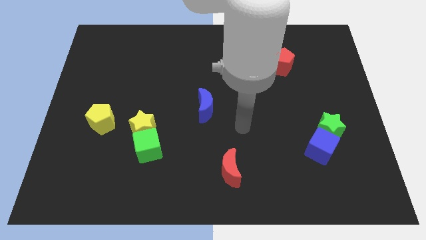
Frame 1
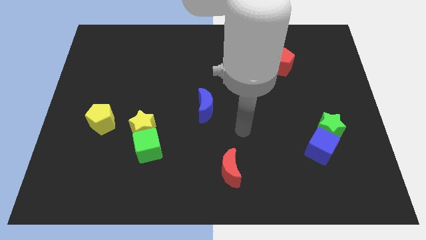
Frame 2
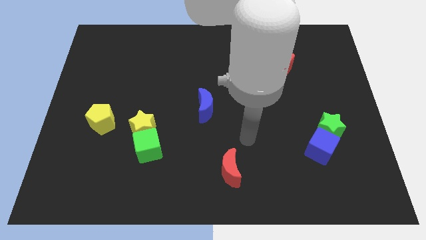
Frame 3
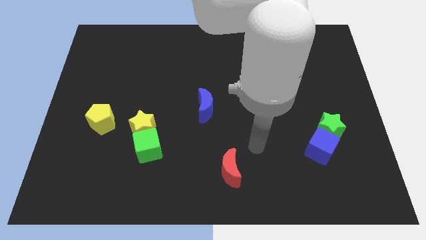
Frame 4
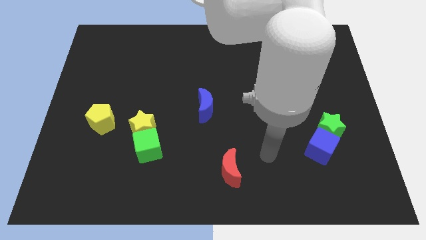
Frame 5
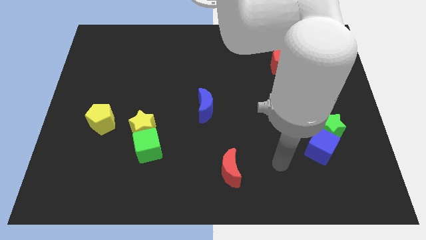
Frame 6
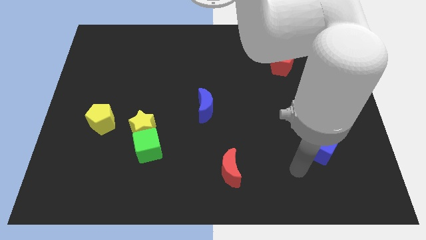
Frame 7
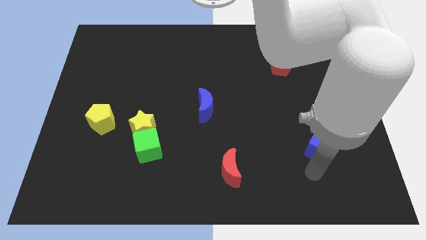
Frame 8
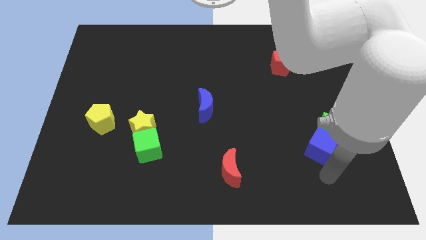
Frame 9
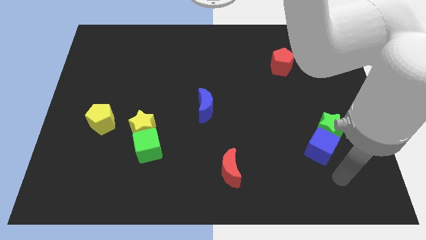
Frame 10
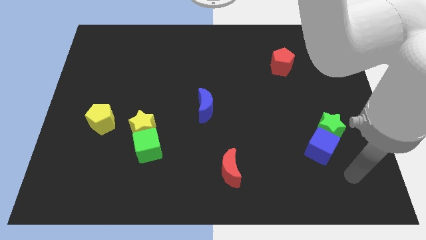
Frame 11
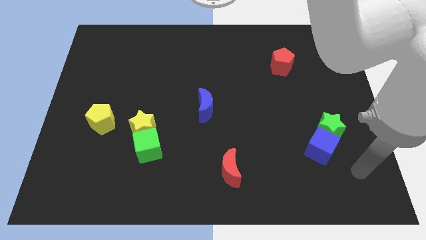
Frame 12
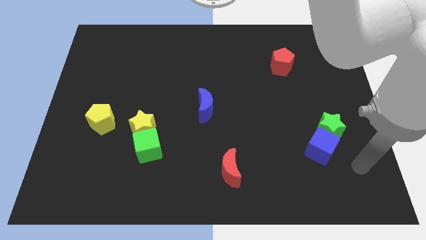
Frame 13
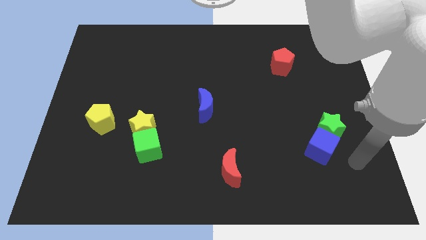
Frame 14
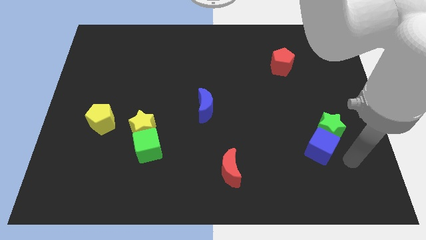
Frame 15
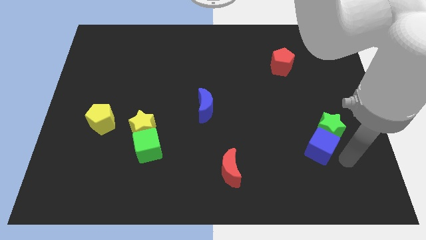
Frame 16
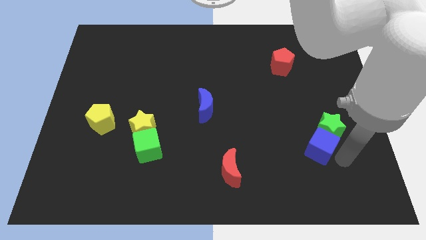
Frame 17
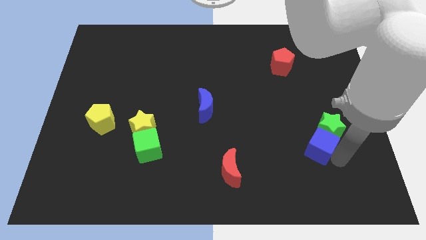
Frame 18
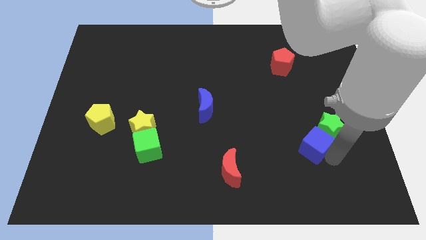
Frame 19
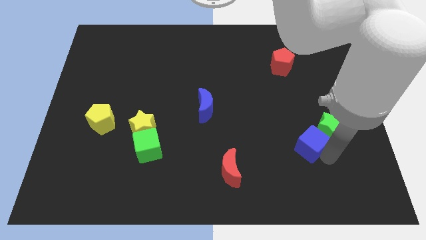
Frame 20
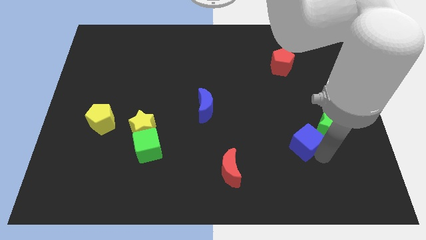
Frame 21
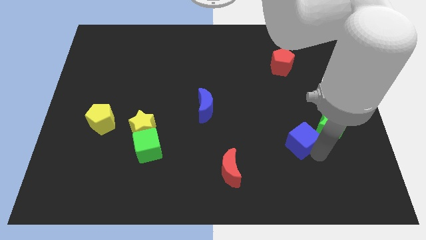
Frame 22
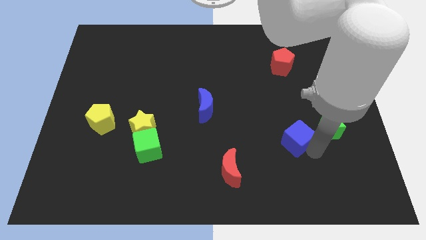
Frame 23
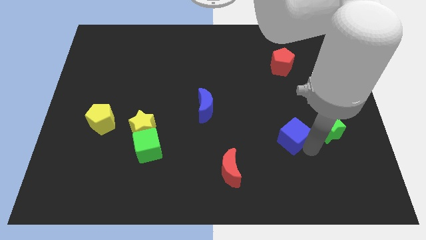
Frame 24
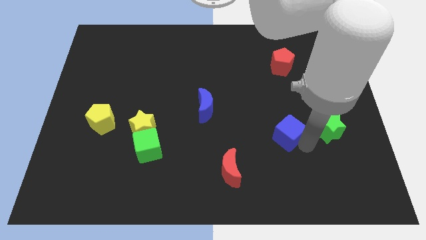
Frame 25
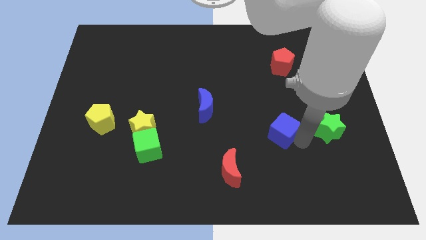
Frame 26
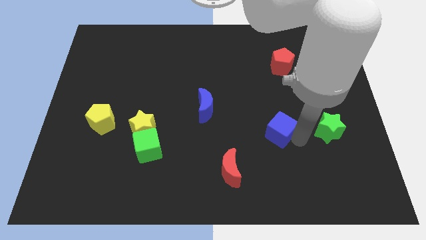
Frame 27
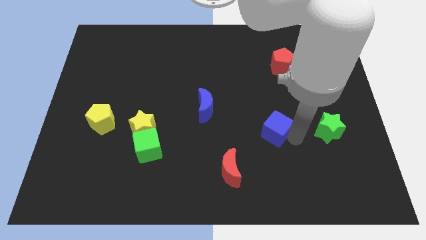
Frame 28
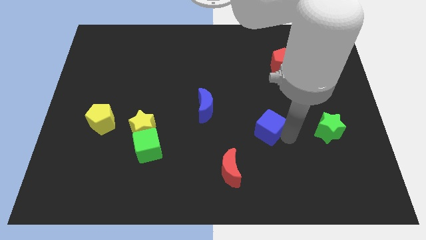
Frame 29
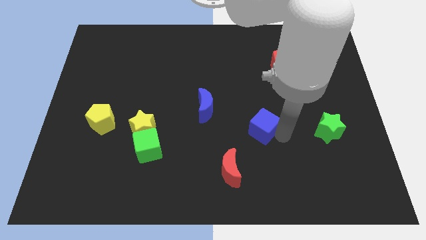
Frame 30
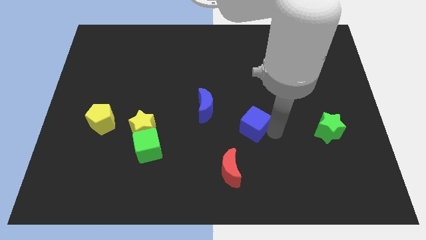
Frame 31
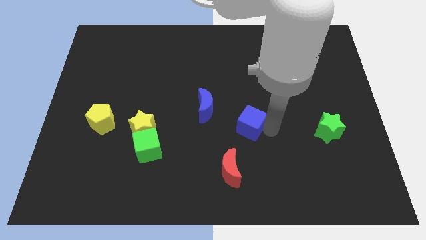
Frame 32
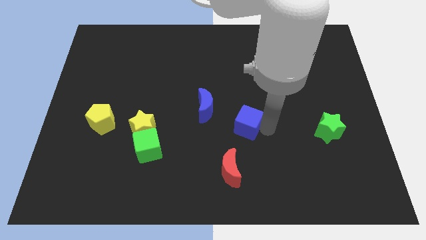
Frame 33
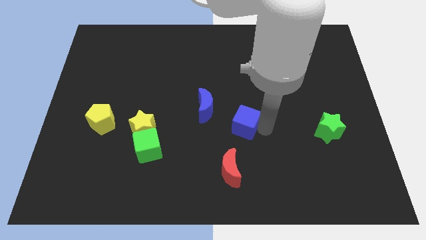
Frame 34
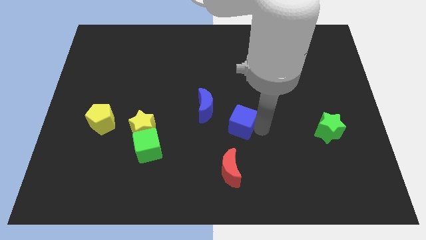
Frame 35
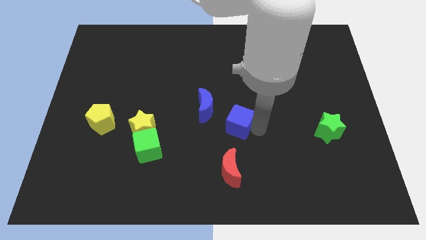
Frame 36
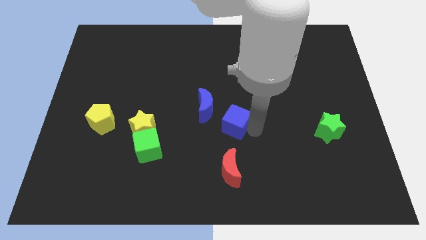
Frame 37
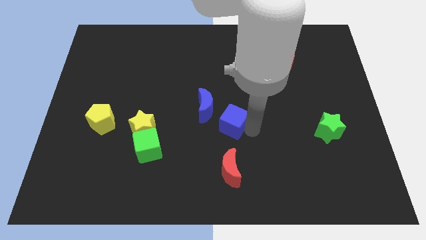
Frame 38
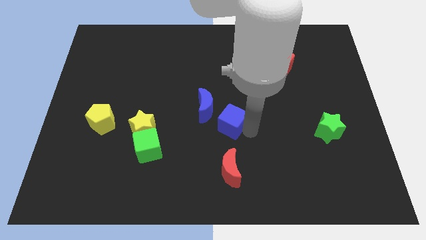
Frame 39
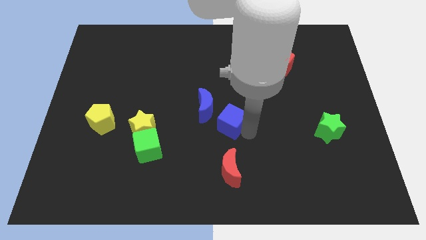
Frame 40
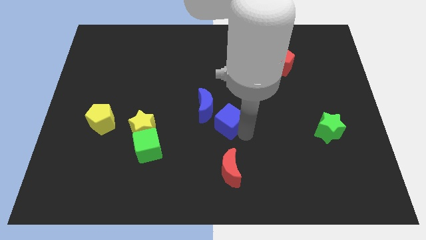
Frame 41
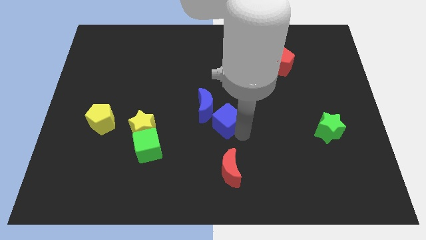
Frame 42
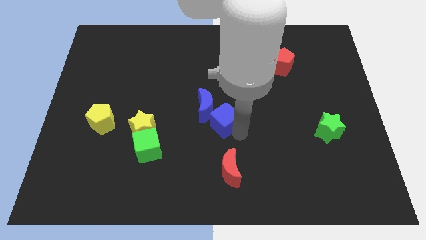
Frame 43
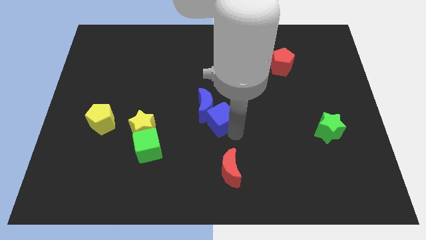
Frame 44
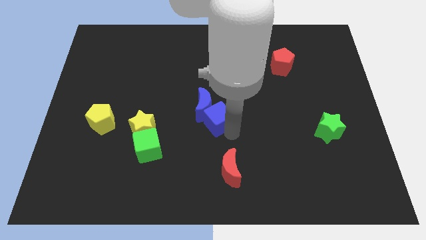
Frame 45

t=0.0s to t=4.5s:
push the blue cube next to the blue moon

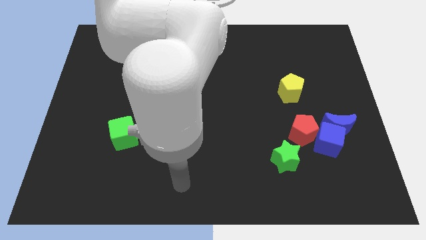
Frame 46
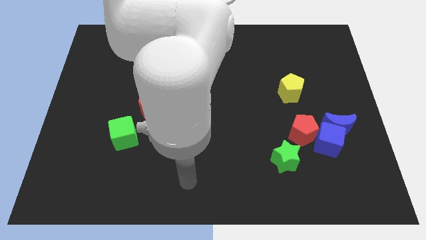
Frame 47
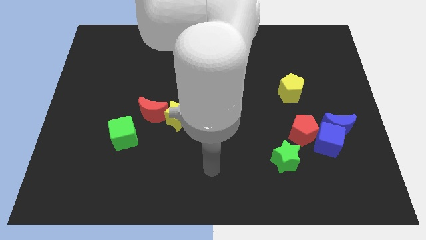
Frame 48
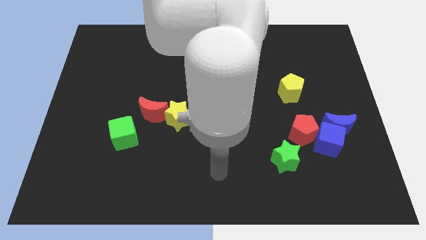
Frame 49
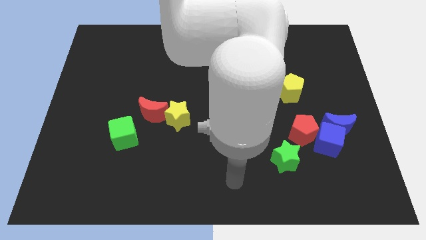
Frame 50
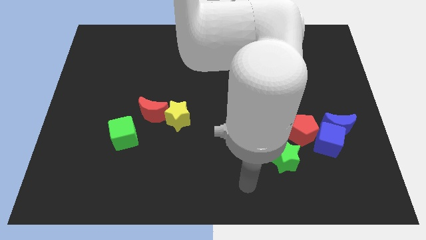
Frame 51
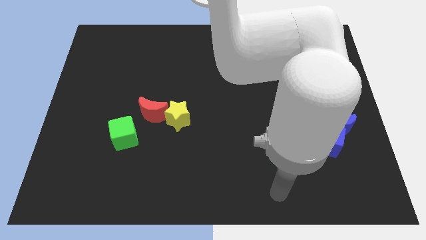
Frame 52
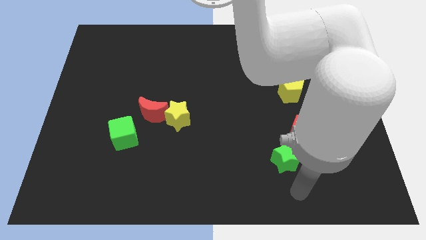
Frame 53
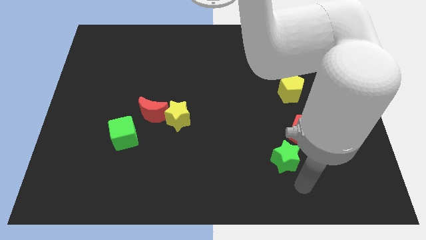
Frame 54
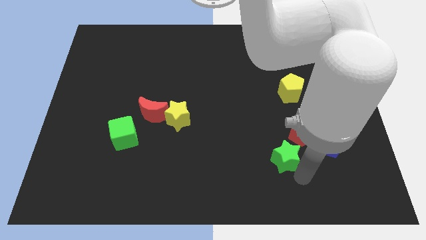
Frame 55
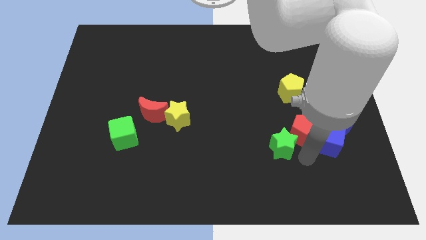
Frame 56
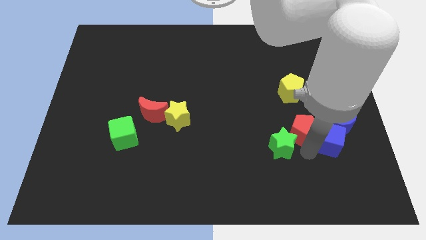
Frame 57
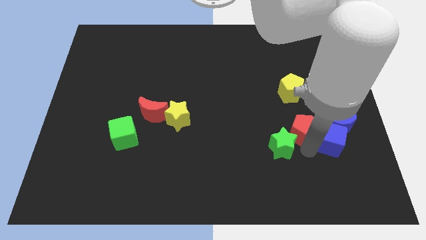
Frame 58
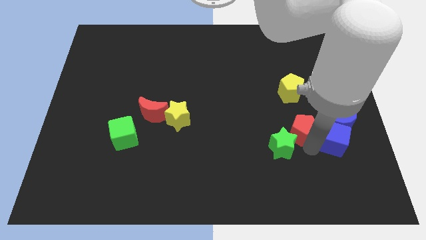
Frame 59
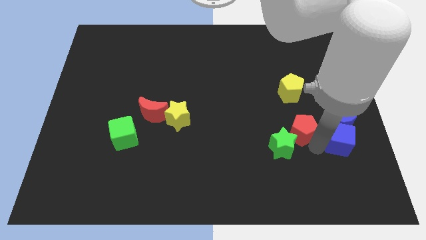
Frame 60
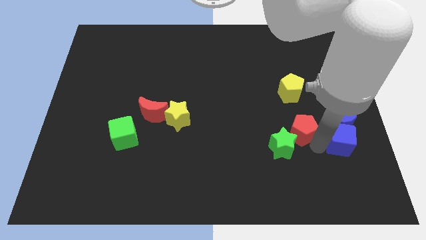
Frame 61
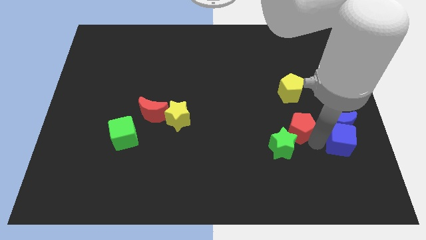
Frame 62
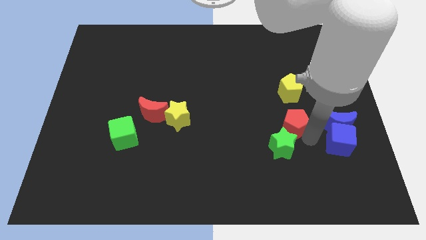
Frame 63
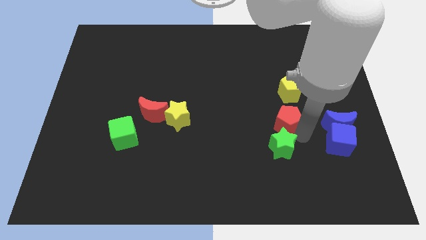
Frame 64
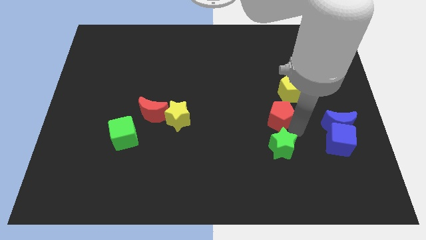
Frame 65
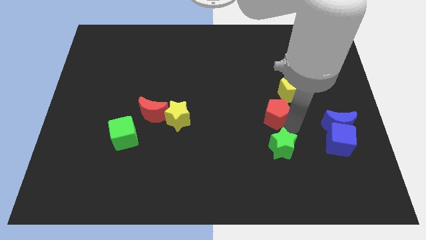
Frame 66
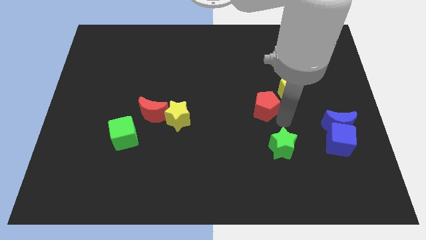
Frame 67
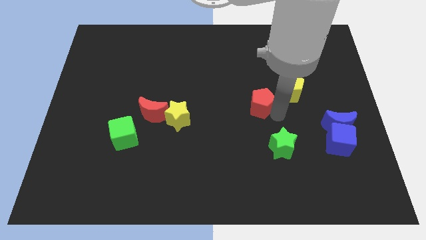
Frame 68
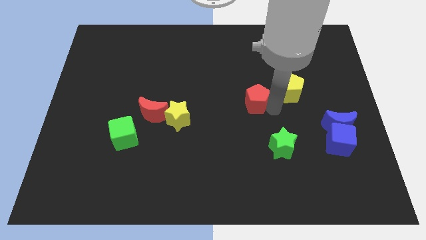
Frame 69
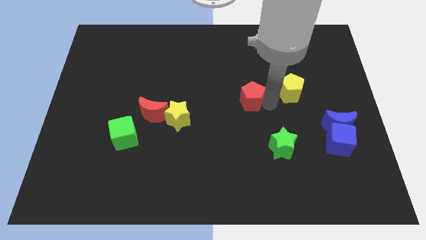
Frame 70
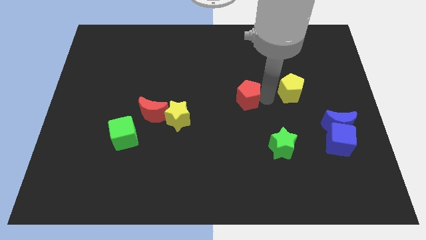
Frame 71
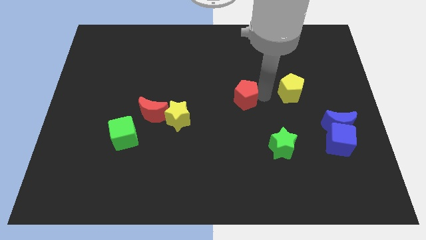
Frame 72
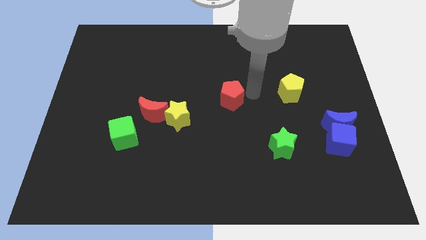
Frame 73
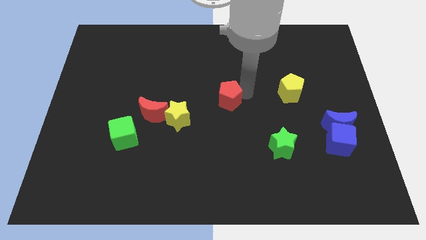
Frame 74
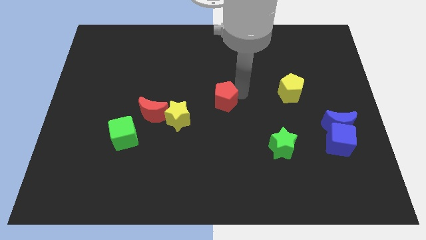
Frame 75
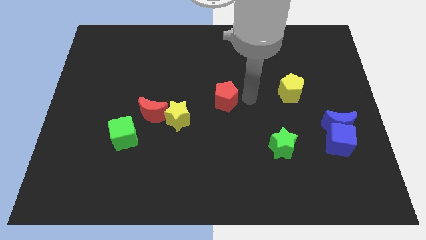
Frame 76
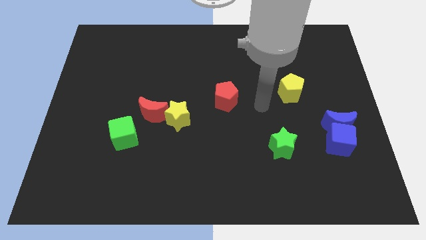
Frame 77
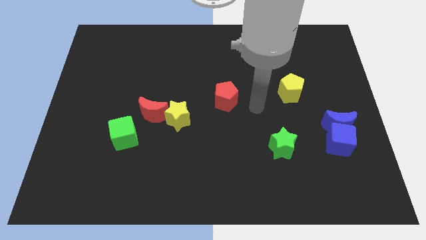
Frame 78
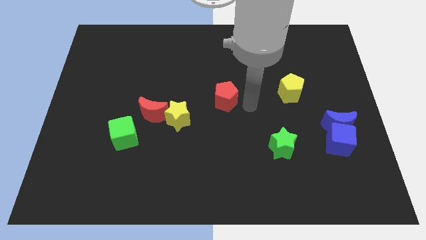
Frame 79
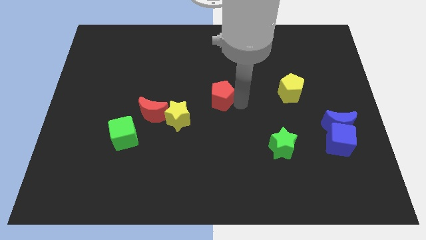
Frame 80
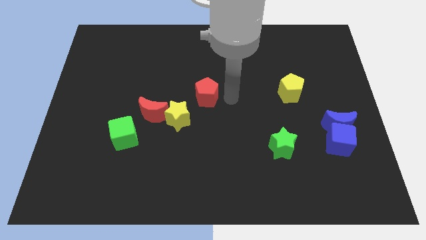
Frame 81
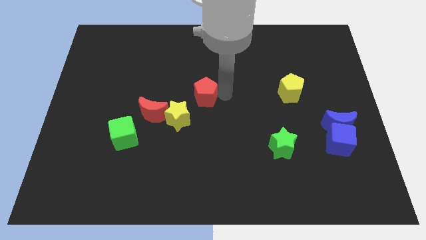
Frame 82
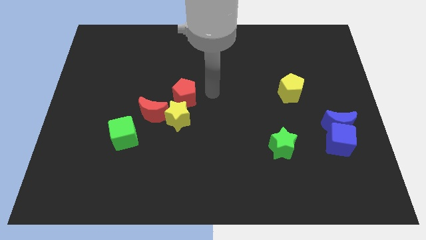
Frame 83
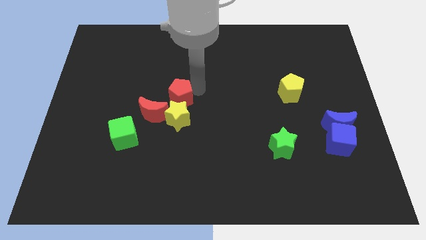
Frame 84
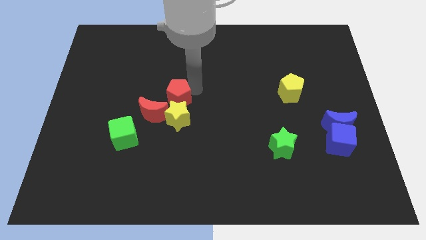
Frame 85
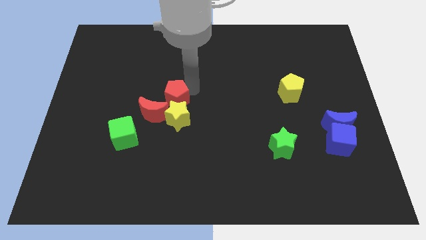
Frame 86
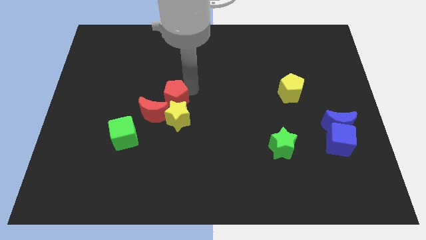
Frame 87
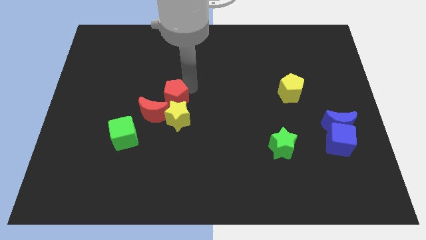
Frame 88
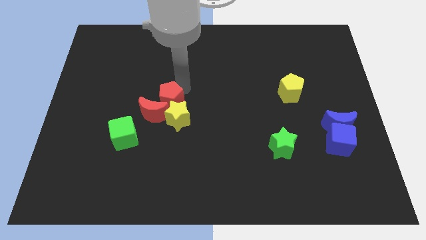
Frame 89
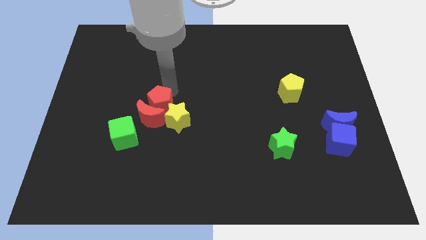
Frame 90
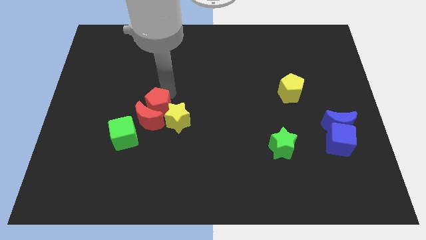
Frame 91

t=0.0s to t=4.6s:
push the red pentagon to the red moon
